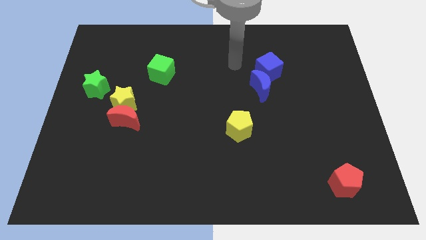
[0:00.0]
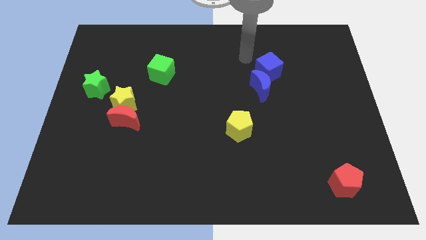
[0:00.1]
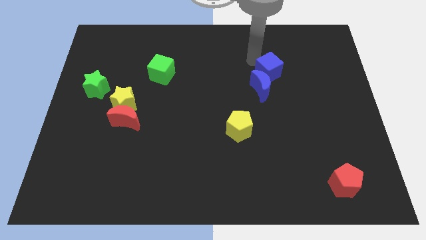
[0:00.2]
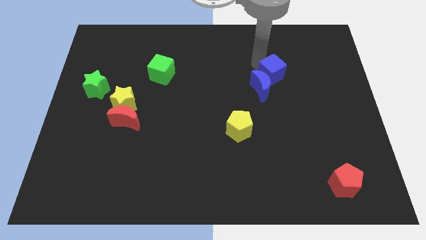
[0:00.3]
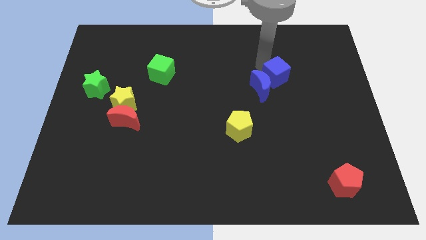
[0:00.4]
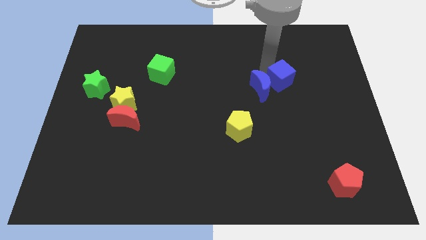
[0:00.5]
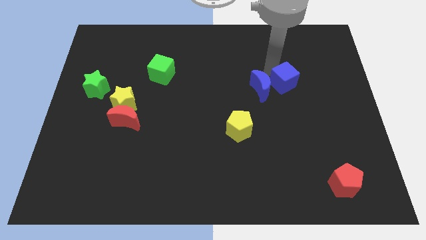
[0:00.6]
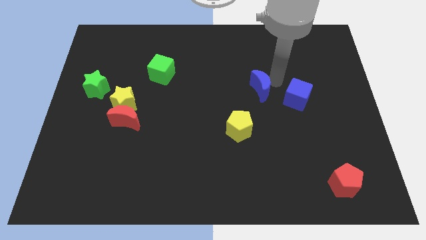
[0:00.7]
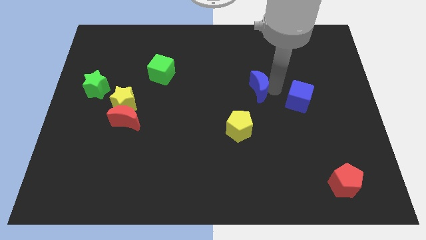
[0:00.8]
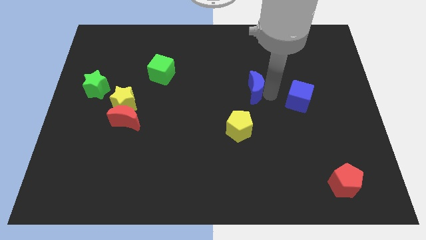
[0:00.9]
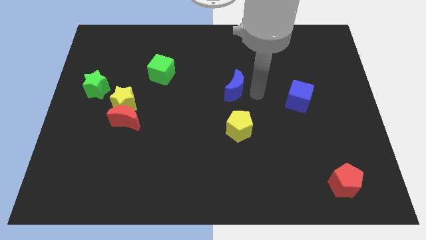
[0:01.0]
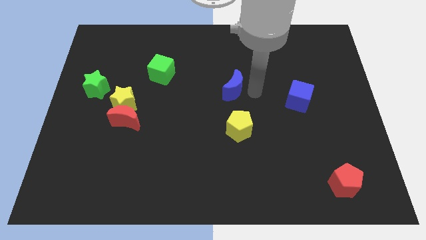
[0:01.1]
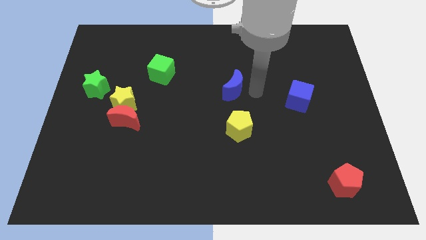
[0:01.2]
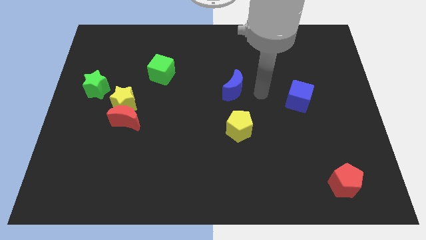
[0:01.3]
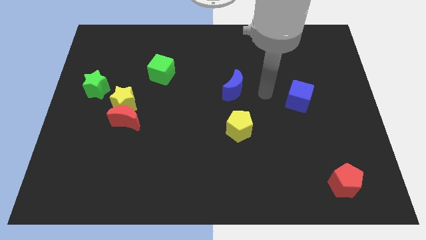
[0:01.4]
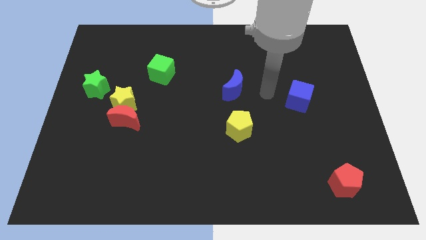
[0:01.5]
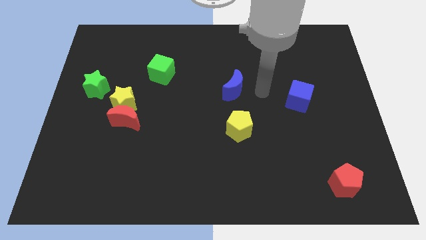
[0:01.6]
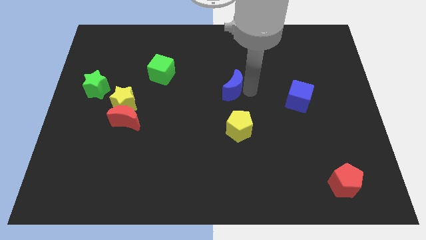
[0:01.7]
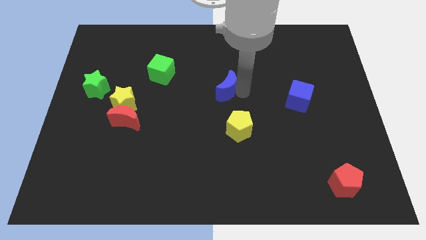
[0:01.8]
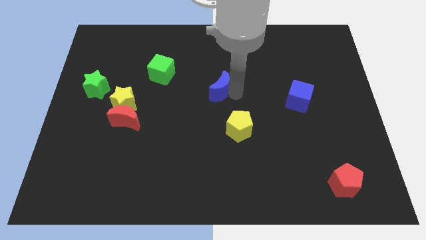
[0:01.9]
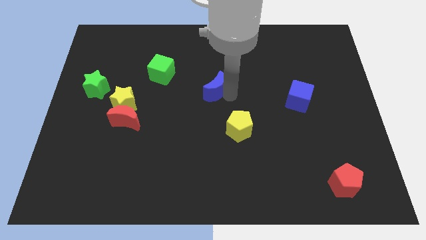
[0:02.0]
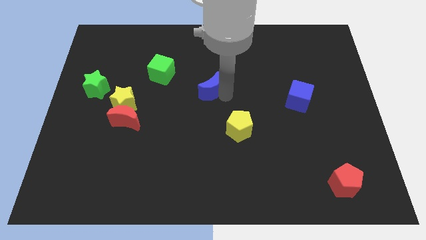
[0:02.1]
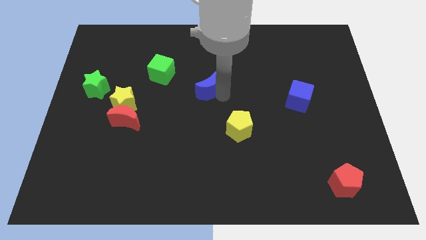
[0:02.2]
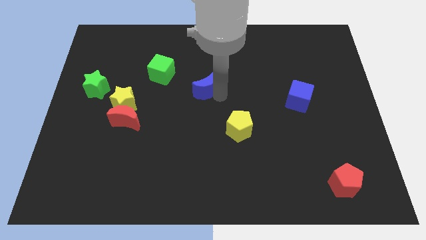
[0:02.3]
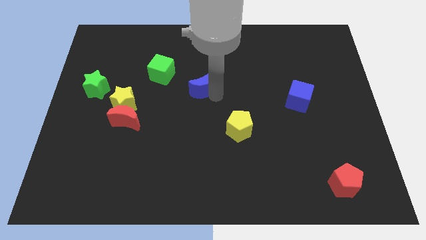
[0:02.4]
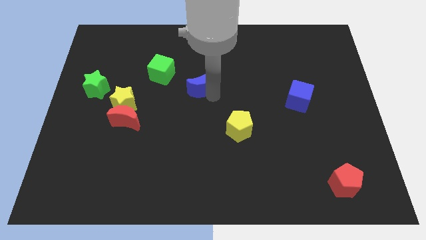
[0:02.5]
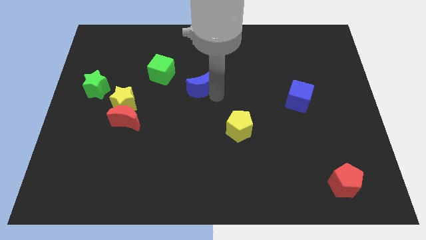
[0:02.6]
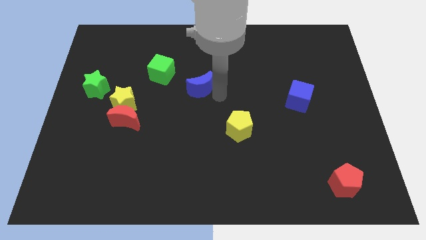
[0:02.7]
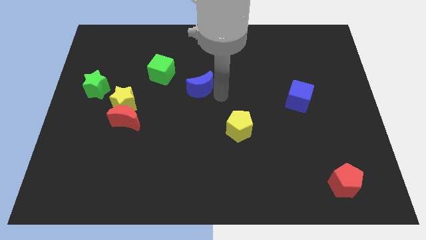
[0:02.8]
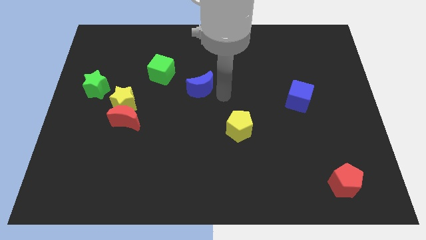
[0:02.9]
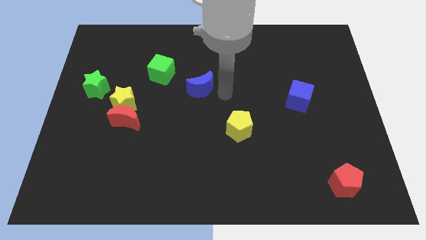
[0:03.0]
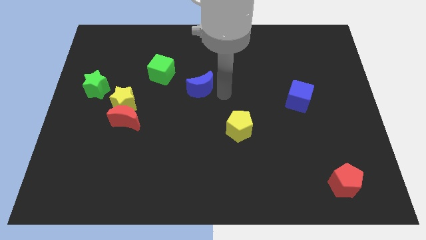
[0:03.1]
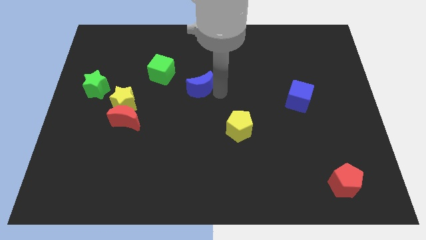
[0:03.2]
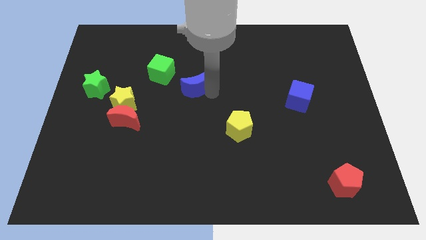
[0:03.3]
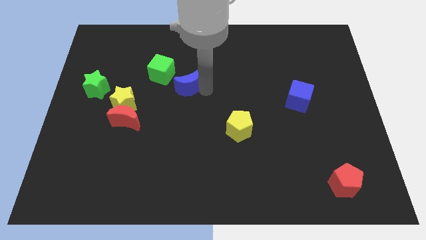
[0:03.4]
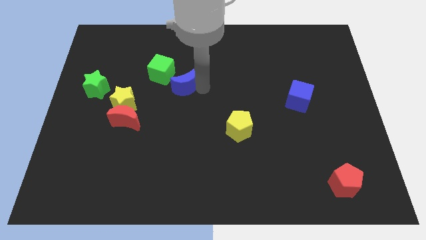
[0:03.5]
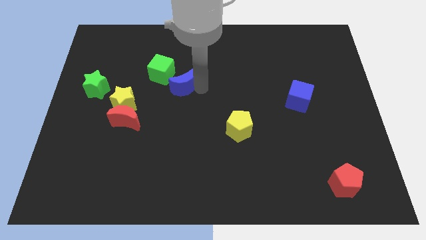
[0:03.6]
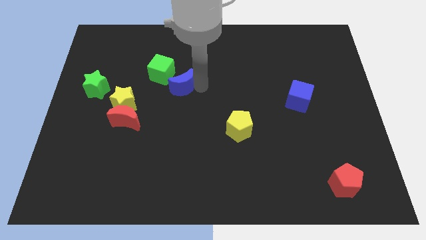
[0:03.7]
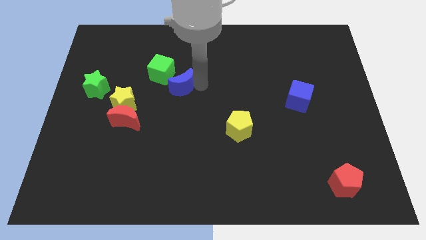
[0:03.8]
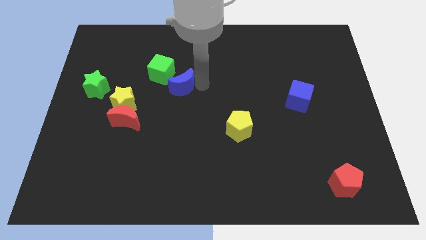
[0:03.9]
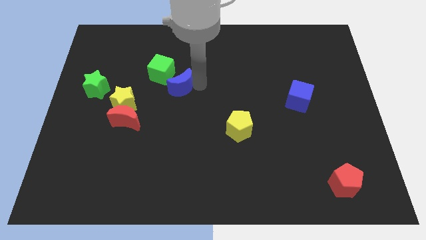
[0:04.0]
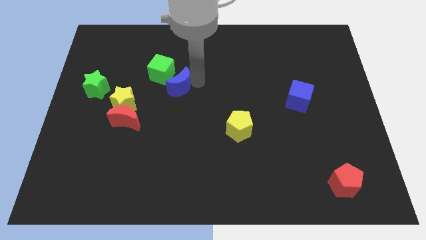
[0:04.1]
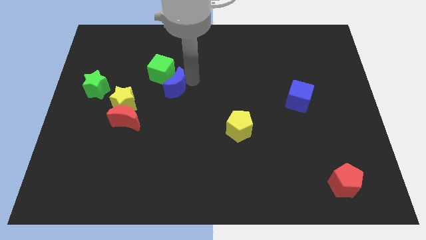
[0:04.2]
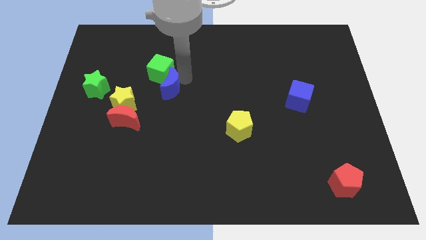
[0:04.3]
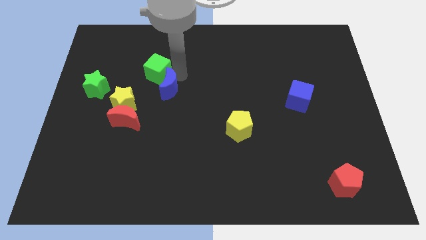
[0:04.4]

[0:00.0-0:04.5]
move the blue moon to the green cube

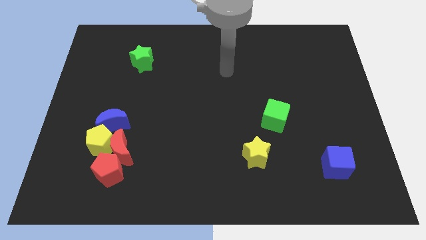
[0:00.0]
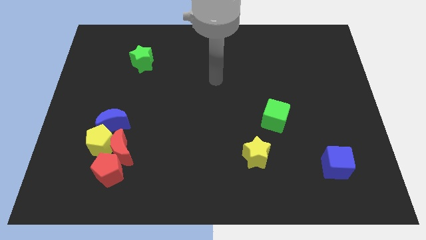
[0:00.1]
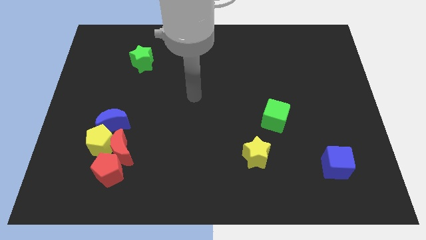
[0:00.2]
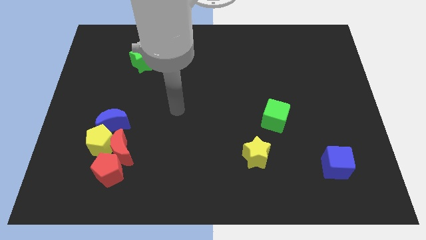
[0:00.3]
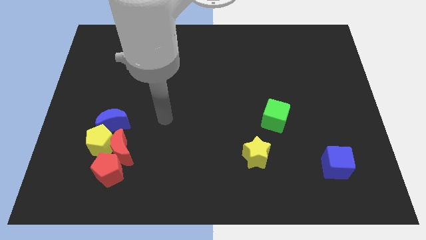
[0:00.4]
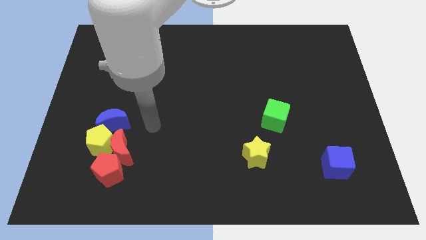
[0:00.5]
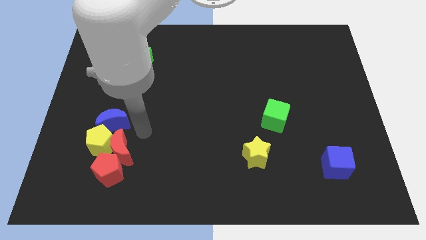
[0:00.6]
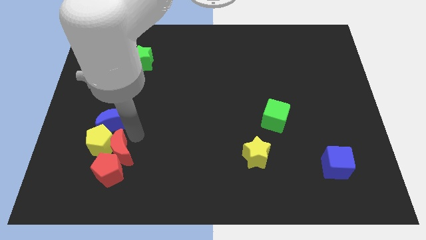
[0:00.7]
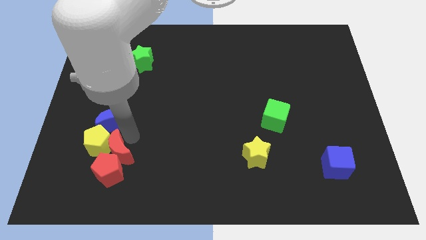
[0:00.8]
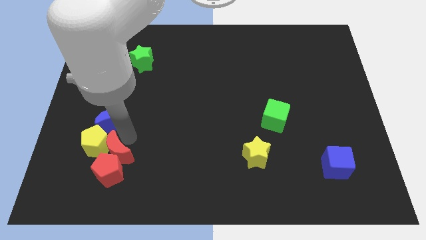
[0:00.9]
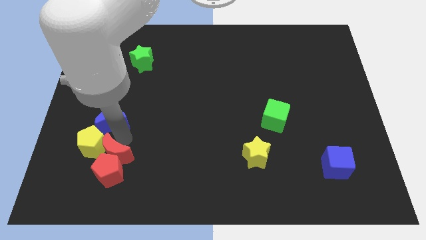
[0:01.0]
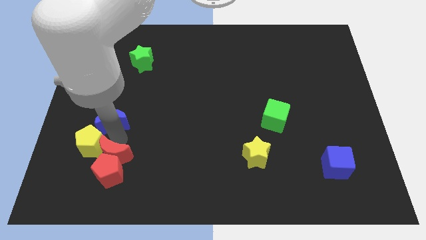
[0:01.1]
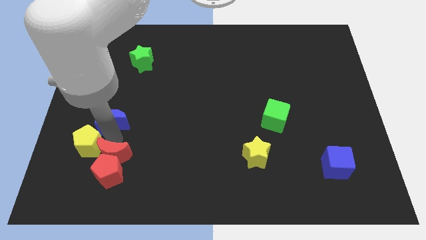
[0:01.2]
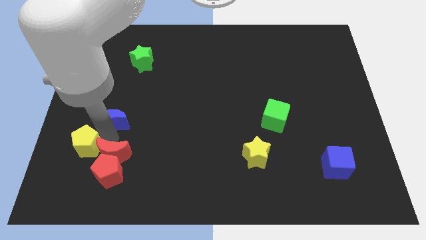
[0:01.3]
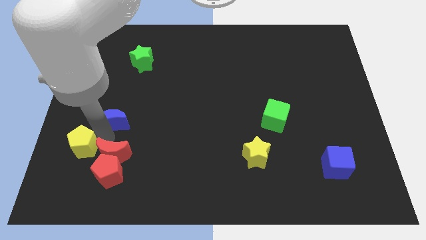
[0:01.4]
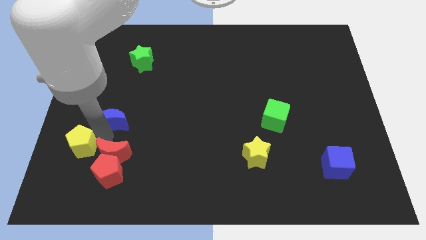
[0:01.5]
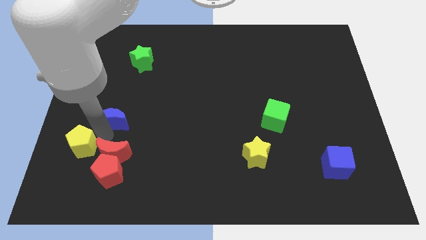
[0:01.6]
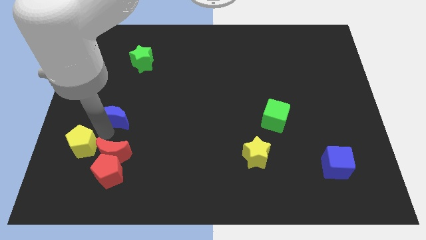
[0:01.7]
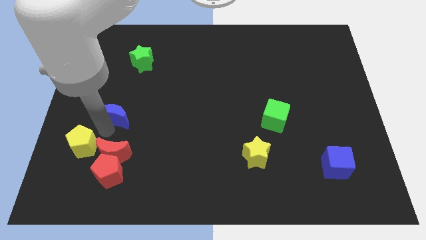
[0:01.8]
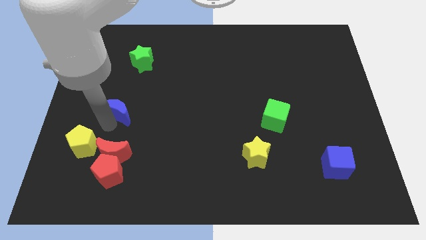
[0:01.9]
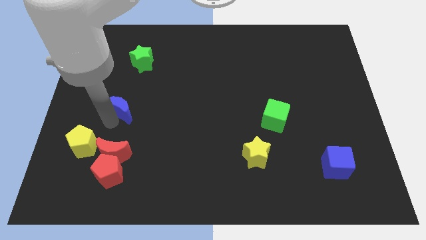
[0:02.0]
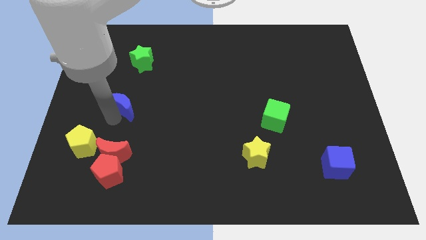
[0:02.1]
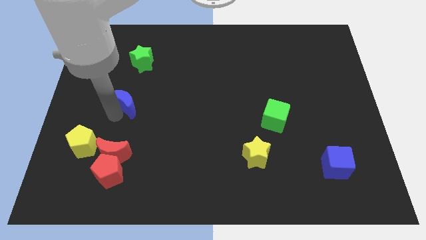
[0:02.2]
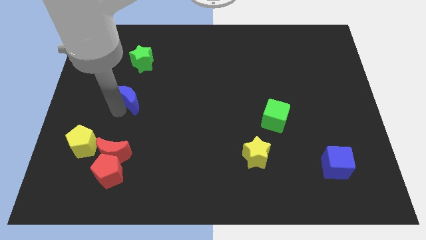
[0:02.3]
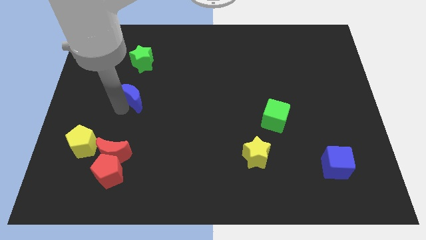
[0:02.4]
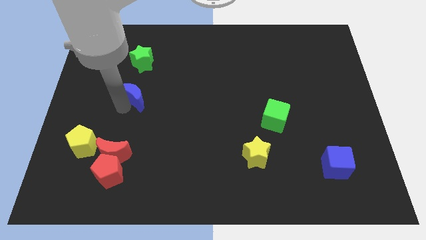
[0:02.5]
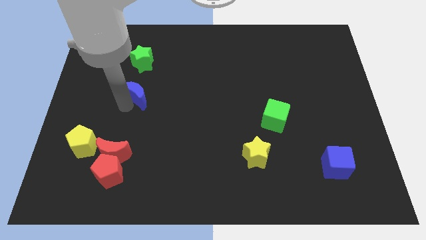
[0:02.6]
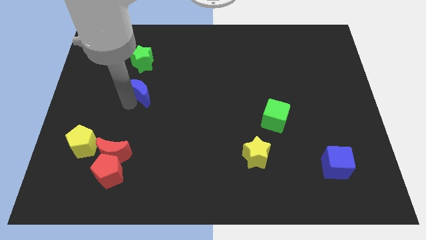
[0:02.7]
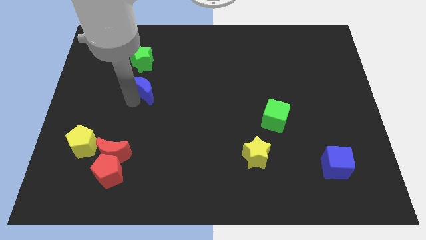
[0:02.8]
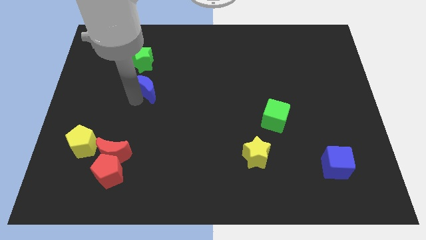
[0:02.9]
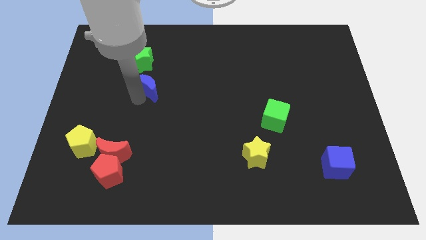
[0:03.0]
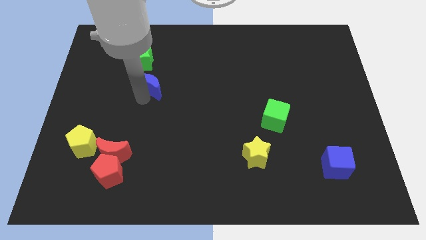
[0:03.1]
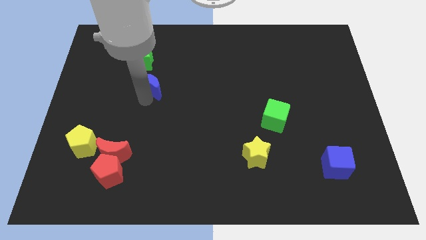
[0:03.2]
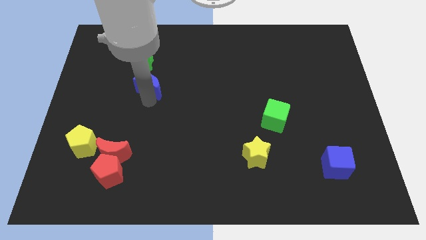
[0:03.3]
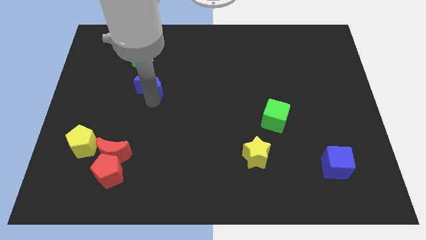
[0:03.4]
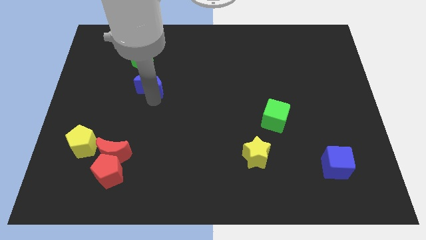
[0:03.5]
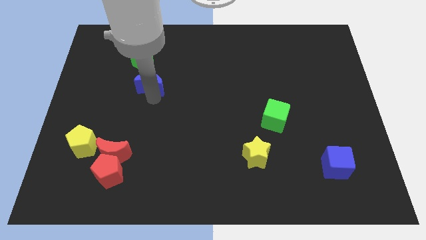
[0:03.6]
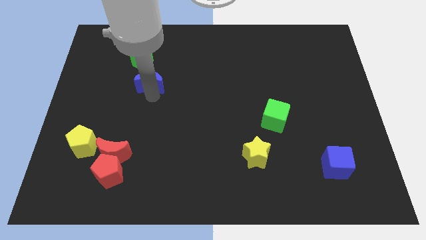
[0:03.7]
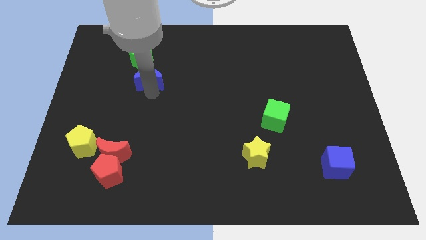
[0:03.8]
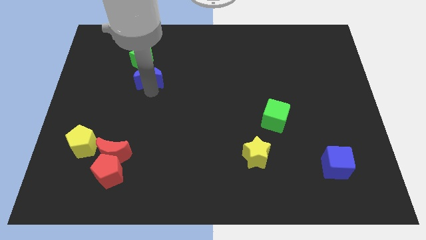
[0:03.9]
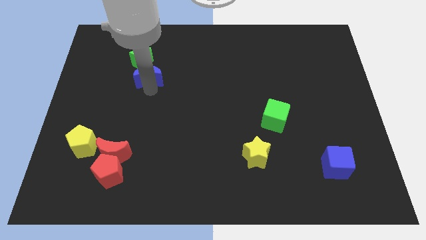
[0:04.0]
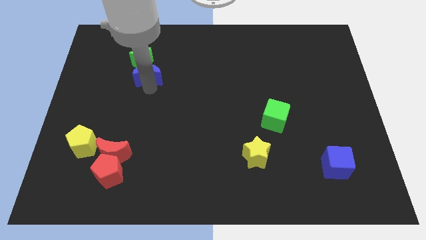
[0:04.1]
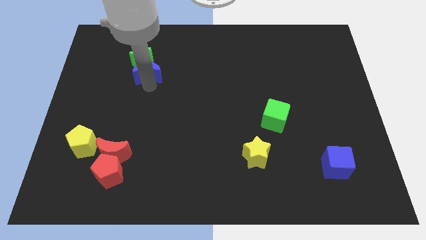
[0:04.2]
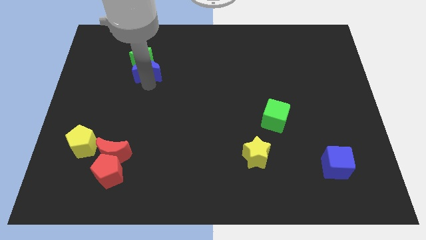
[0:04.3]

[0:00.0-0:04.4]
slide the blue moon towards the green star
